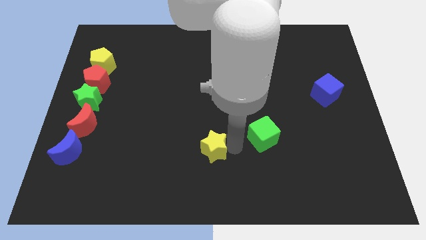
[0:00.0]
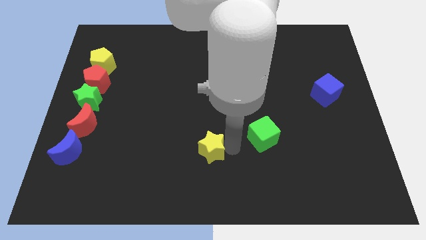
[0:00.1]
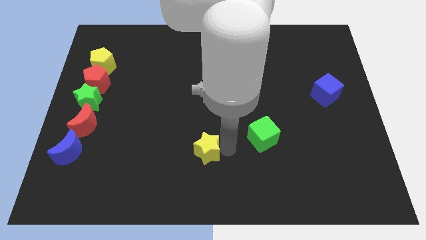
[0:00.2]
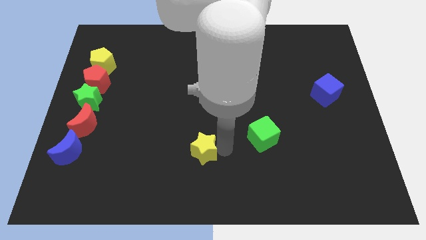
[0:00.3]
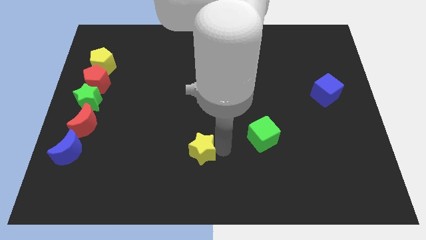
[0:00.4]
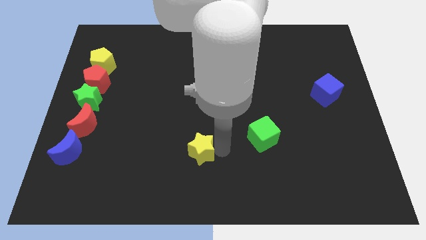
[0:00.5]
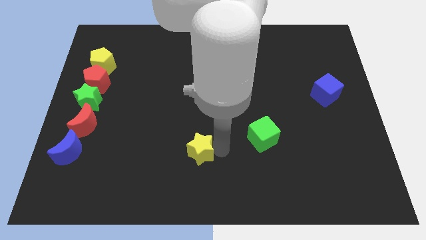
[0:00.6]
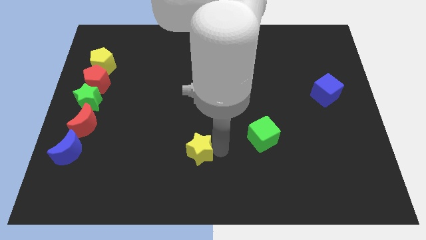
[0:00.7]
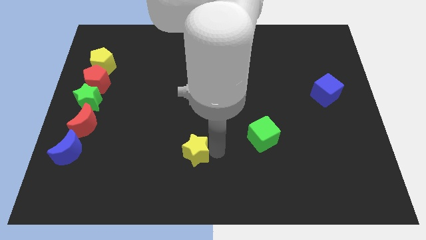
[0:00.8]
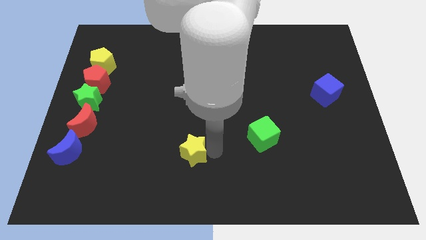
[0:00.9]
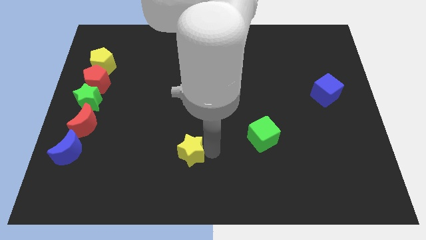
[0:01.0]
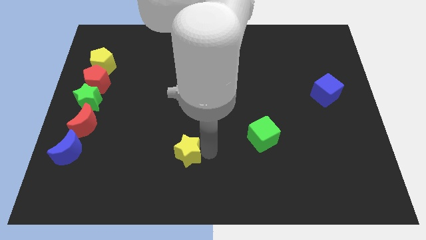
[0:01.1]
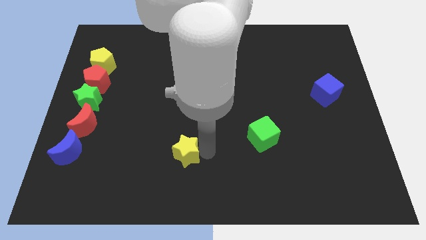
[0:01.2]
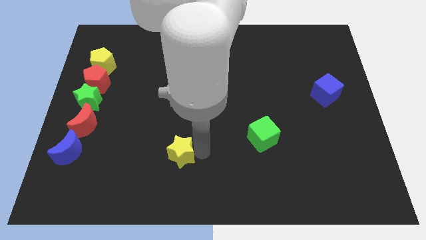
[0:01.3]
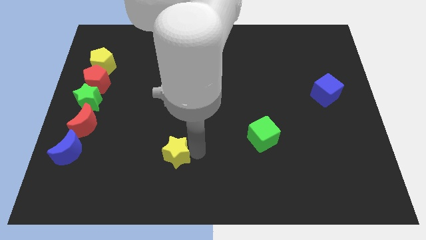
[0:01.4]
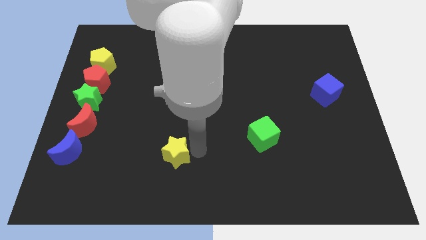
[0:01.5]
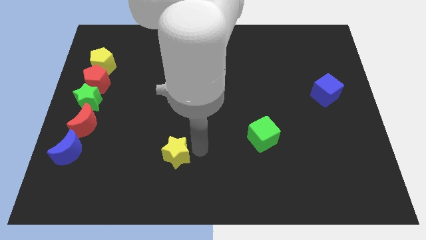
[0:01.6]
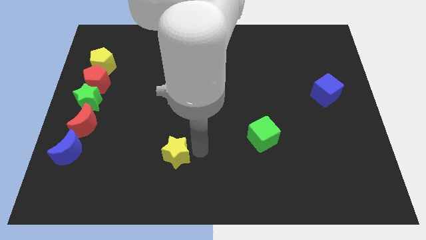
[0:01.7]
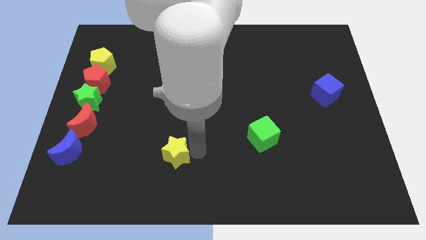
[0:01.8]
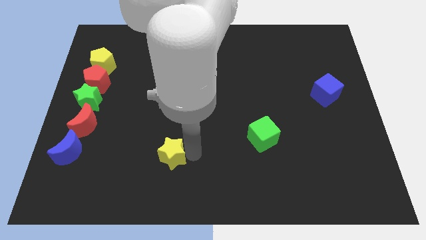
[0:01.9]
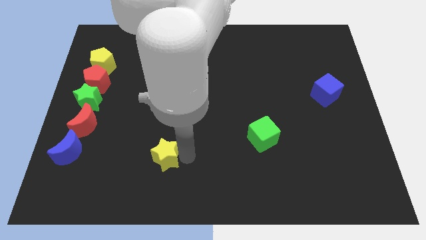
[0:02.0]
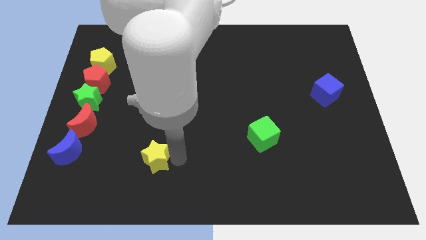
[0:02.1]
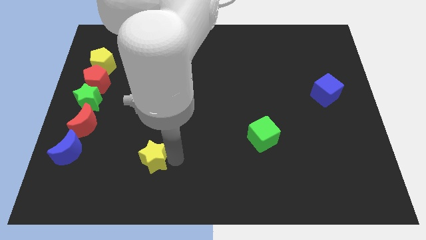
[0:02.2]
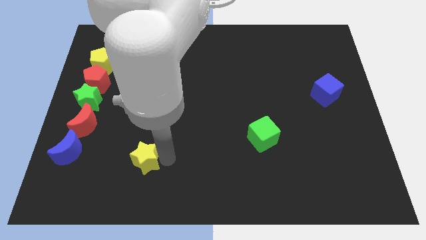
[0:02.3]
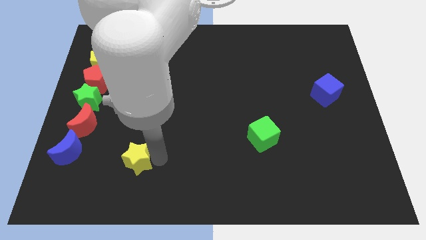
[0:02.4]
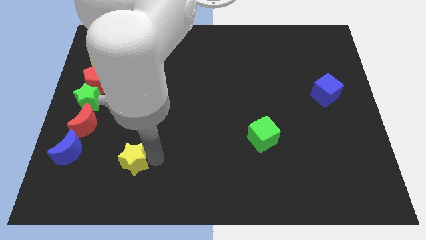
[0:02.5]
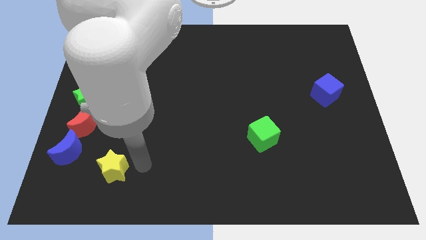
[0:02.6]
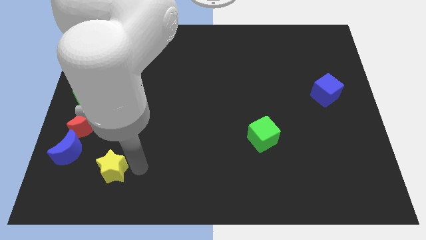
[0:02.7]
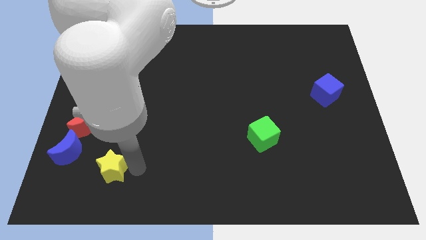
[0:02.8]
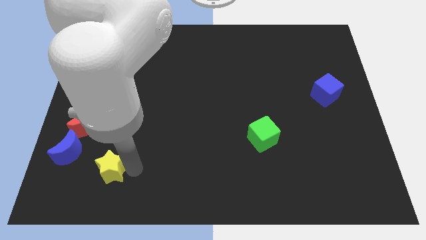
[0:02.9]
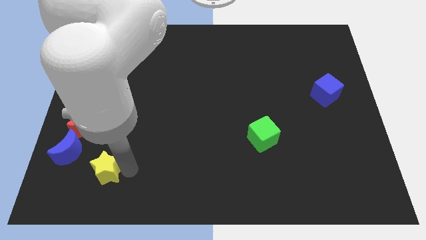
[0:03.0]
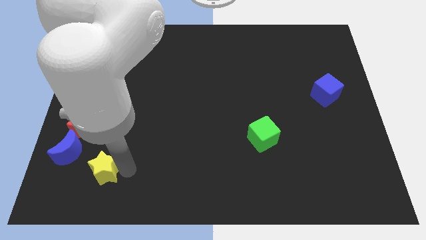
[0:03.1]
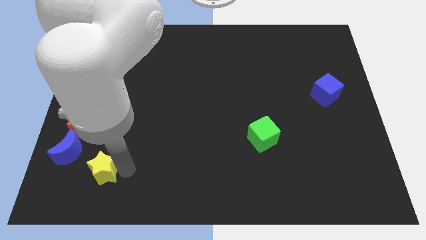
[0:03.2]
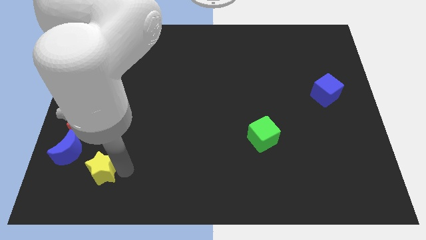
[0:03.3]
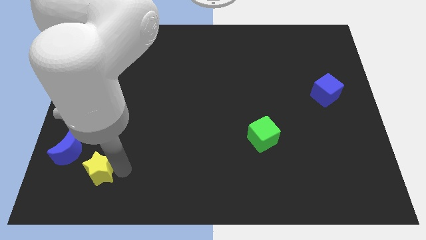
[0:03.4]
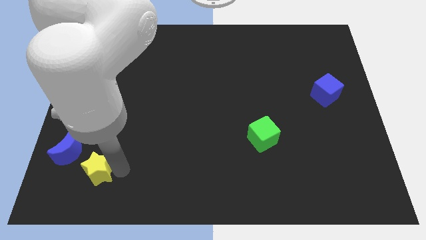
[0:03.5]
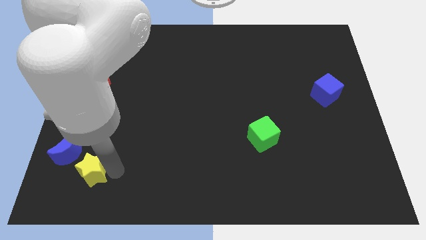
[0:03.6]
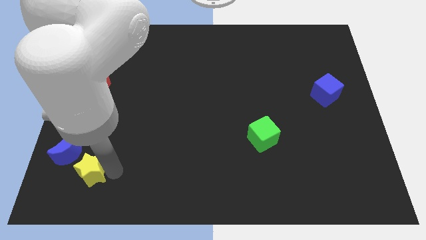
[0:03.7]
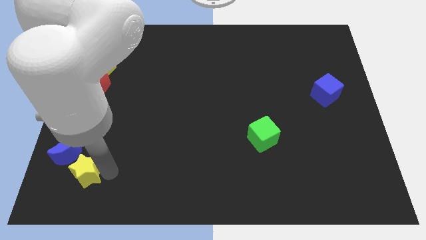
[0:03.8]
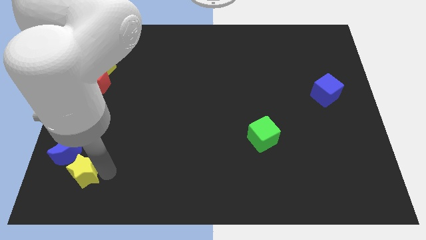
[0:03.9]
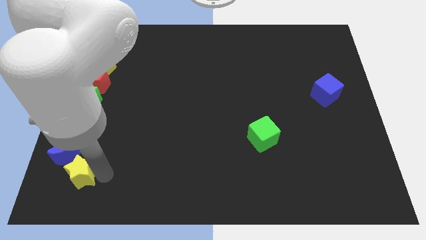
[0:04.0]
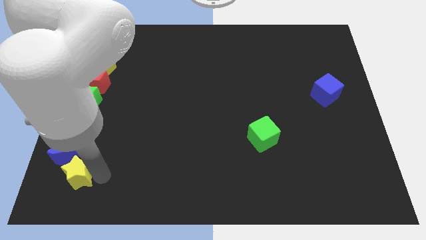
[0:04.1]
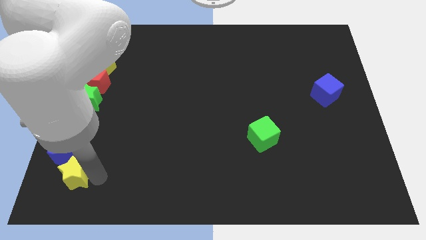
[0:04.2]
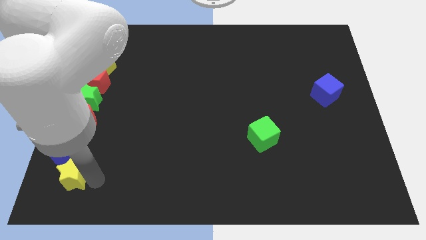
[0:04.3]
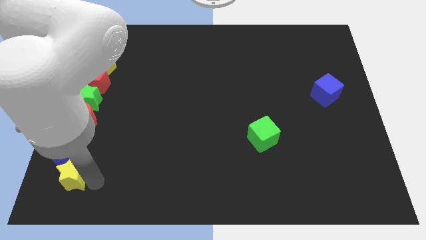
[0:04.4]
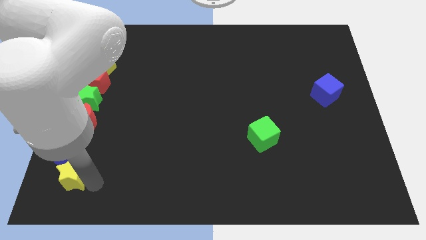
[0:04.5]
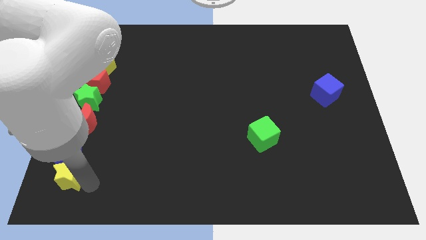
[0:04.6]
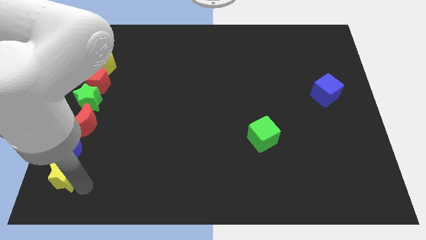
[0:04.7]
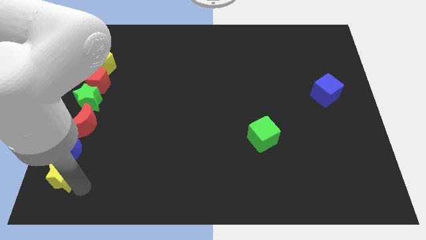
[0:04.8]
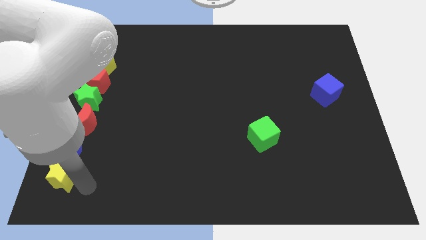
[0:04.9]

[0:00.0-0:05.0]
place yellow star to the bottom of the blue moon

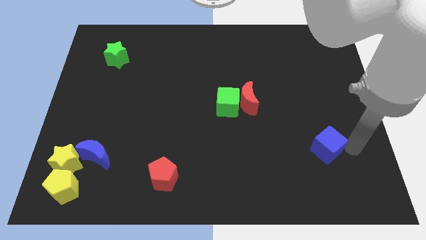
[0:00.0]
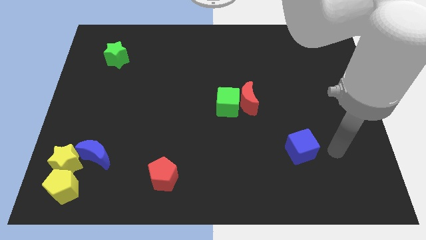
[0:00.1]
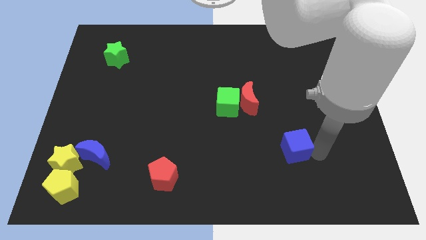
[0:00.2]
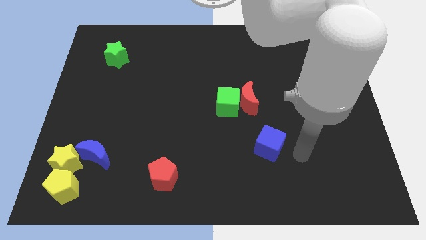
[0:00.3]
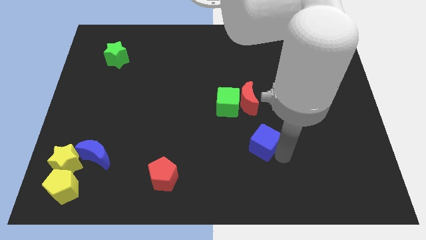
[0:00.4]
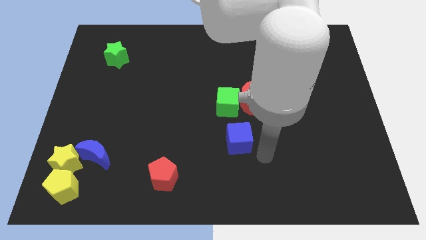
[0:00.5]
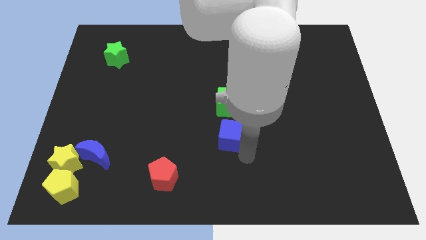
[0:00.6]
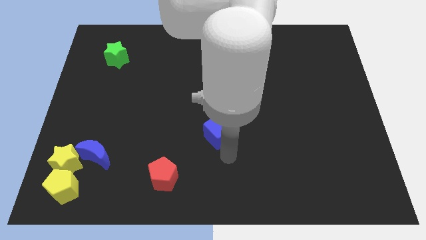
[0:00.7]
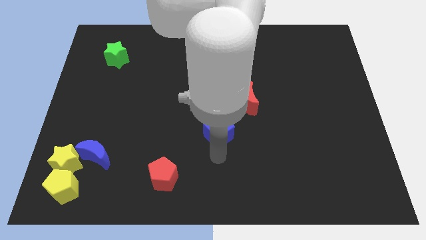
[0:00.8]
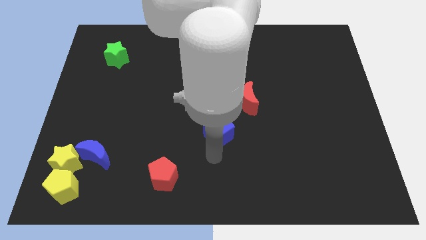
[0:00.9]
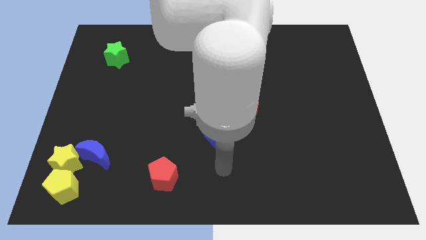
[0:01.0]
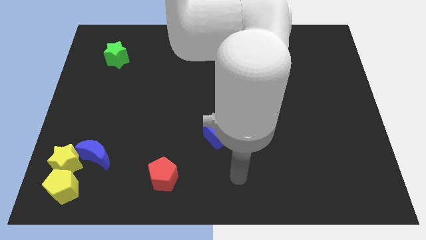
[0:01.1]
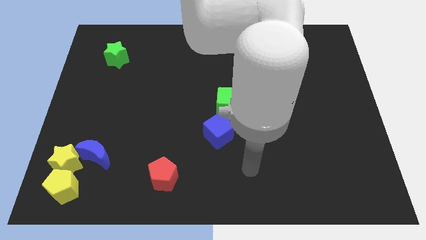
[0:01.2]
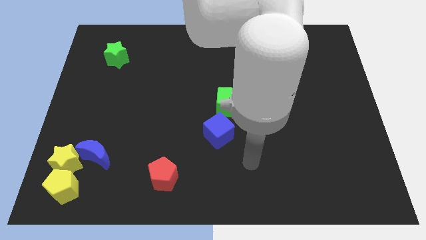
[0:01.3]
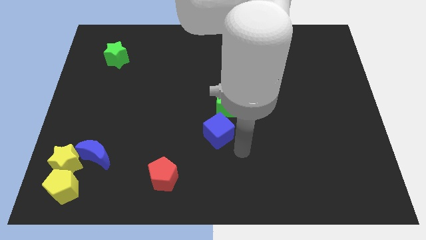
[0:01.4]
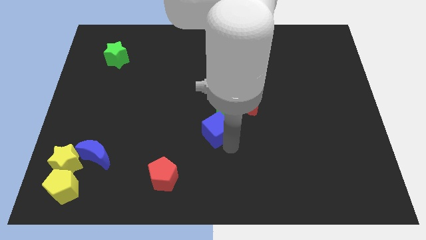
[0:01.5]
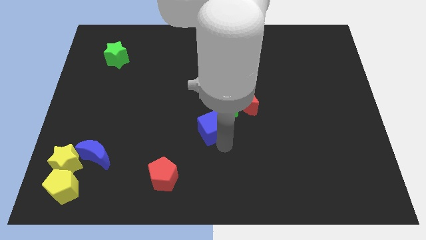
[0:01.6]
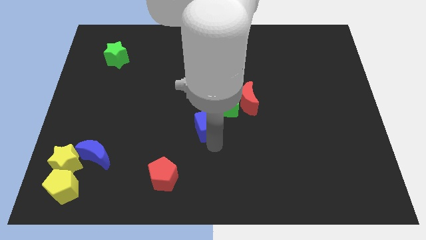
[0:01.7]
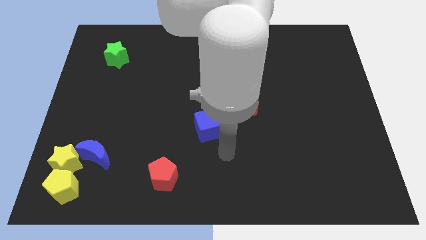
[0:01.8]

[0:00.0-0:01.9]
move the blue cube below the green cube

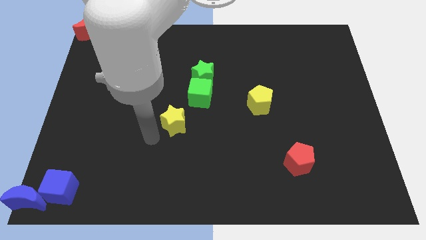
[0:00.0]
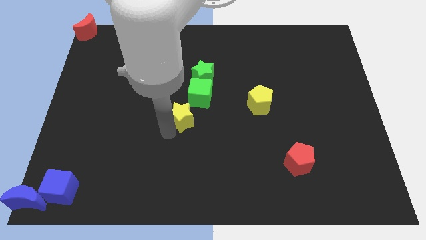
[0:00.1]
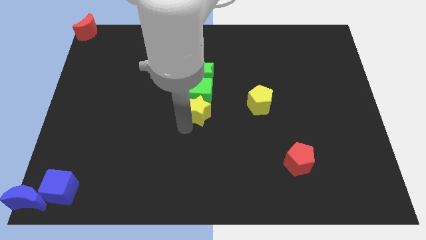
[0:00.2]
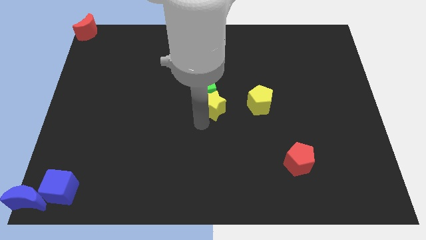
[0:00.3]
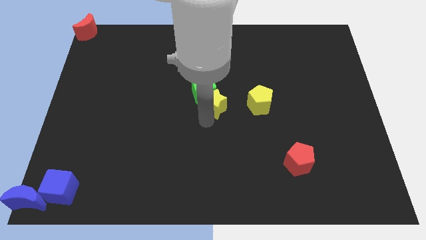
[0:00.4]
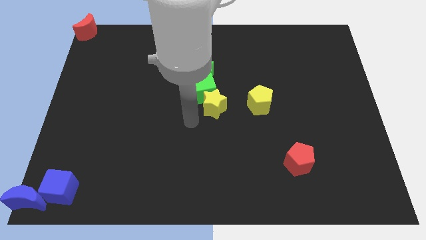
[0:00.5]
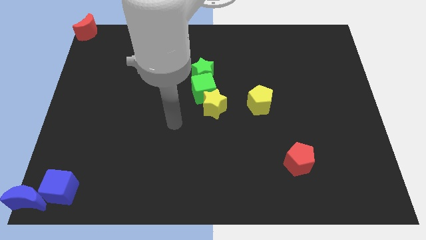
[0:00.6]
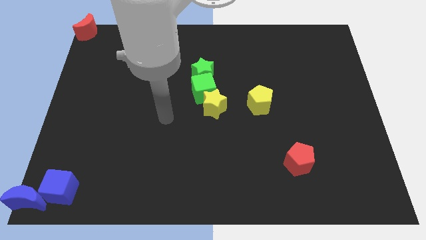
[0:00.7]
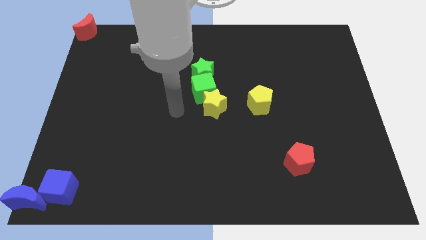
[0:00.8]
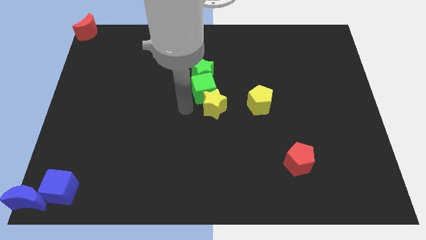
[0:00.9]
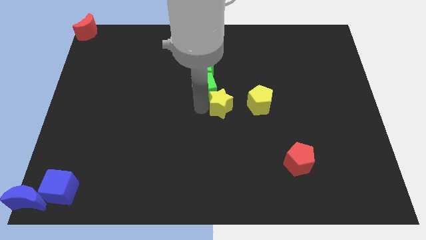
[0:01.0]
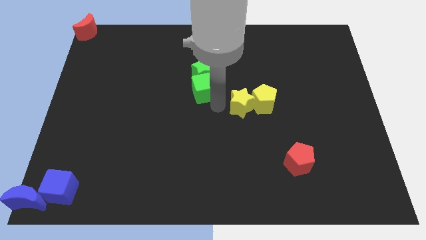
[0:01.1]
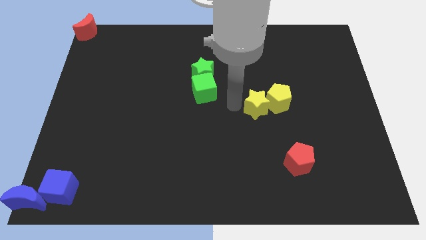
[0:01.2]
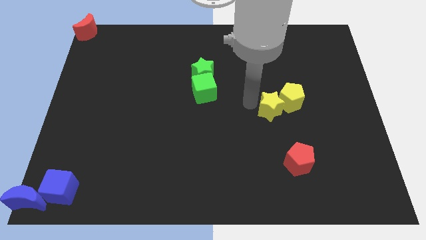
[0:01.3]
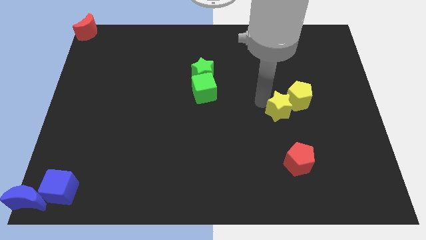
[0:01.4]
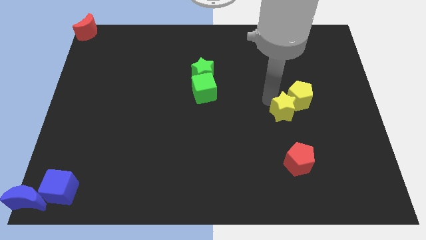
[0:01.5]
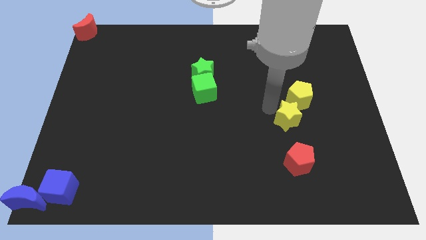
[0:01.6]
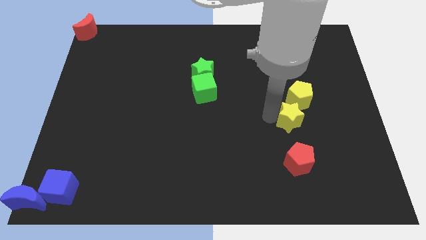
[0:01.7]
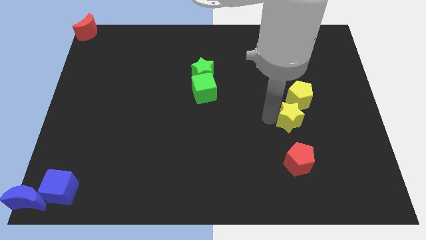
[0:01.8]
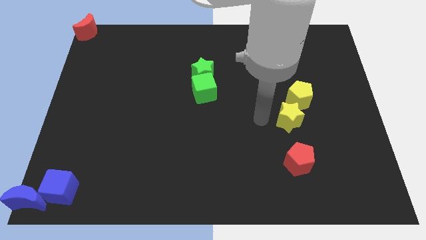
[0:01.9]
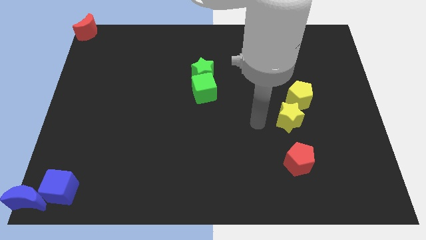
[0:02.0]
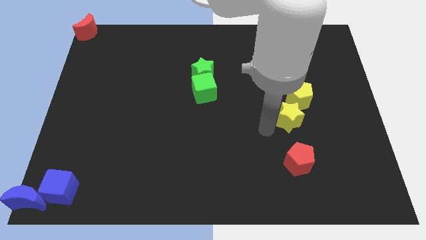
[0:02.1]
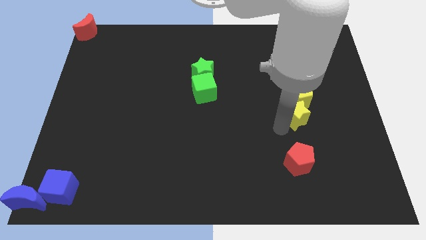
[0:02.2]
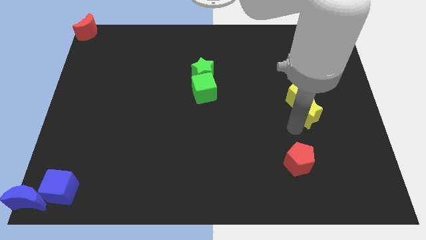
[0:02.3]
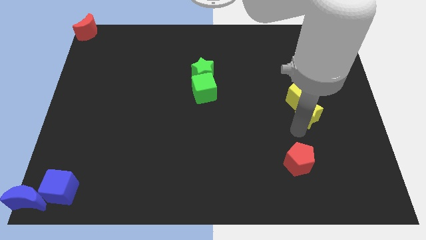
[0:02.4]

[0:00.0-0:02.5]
push the yellow star into the yellow pentagon
